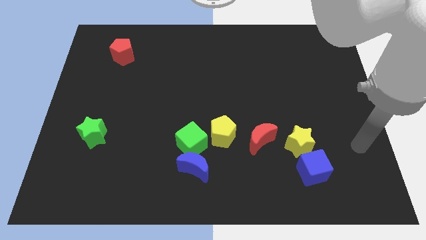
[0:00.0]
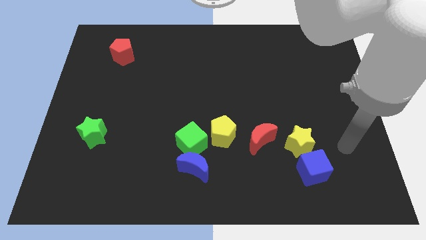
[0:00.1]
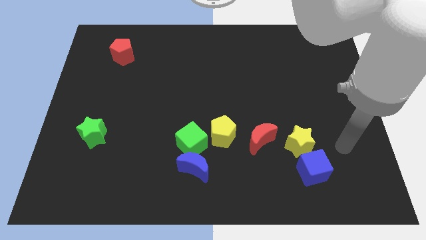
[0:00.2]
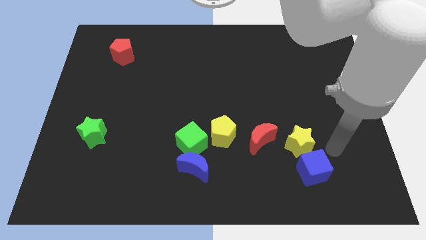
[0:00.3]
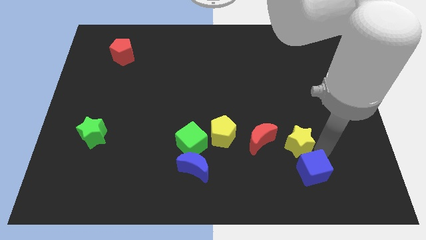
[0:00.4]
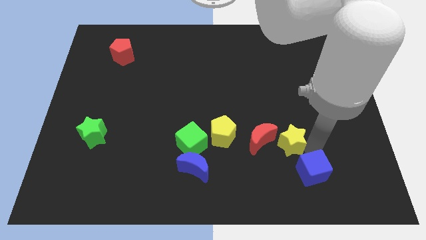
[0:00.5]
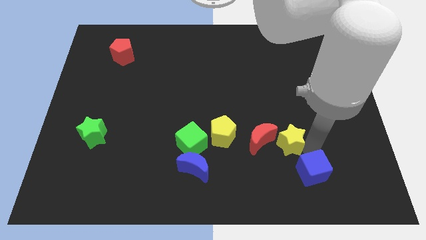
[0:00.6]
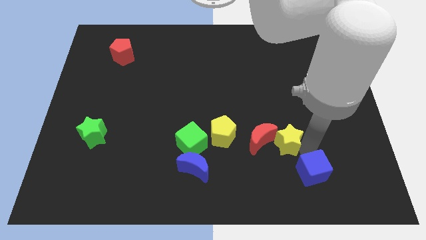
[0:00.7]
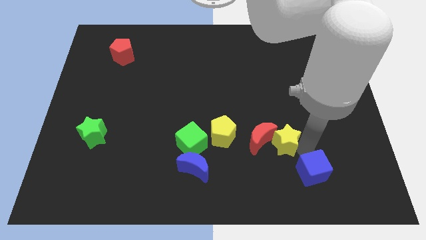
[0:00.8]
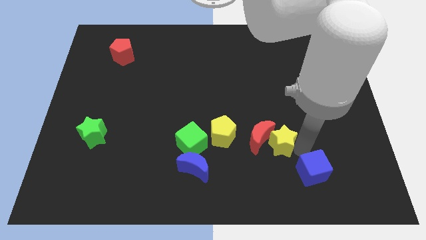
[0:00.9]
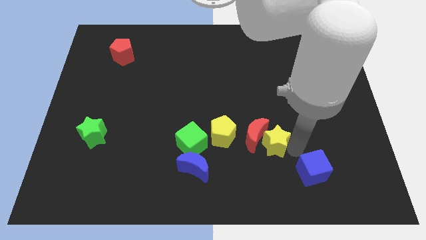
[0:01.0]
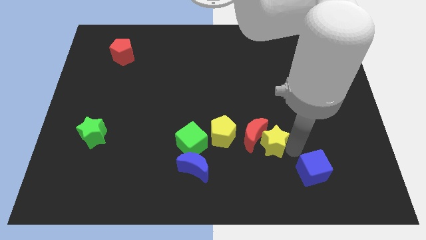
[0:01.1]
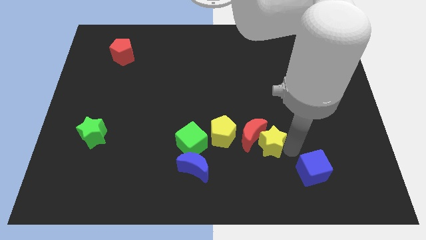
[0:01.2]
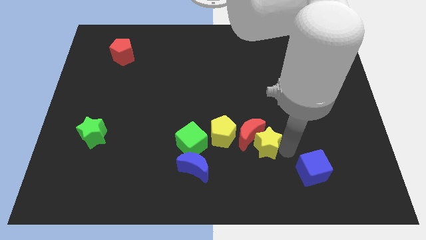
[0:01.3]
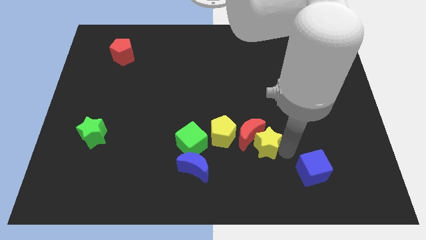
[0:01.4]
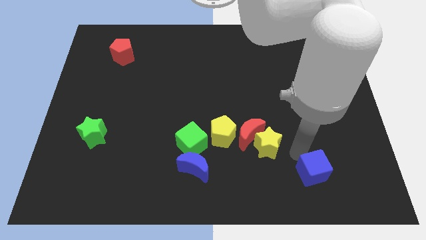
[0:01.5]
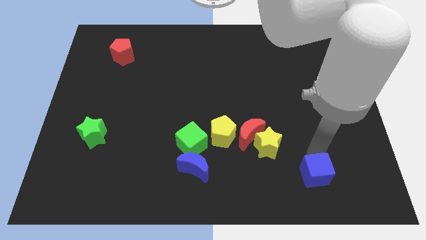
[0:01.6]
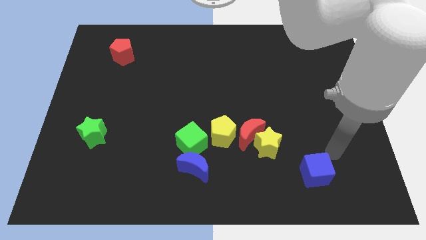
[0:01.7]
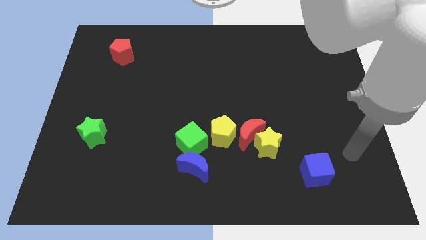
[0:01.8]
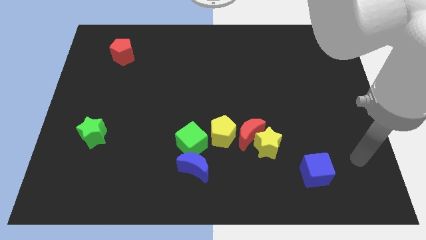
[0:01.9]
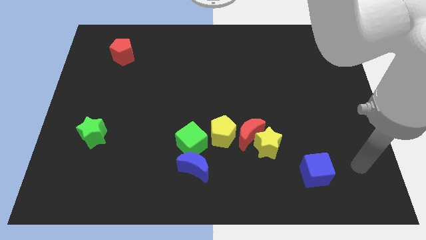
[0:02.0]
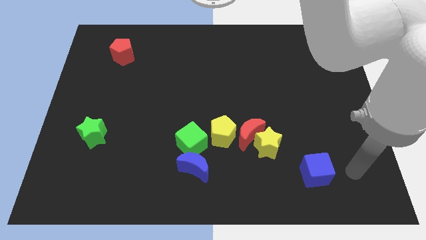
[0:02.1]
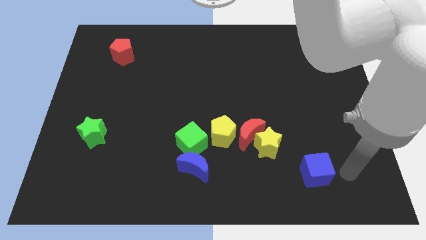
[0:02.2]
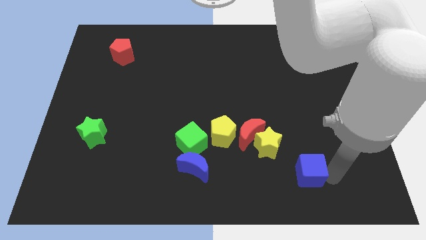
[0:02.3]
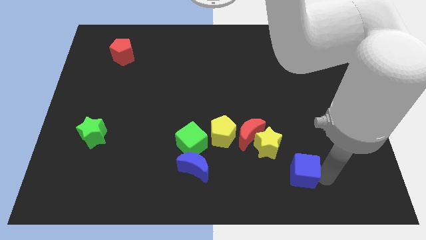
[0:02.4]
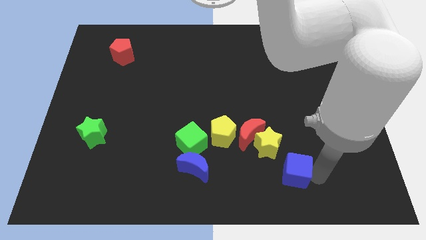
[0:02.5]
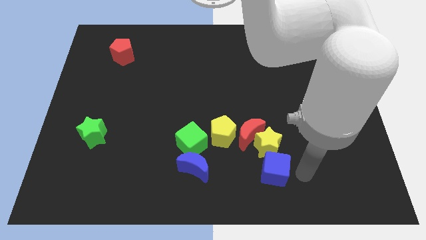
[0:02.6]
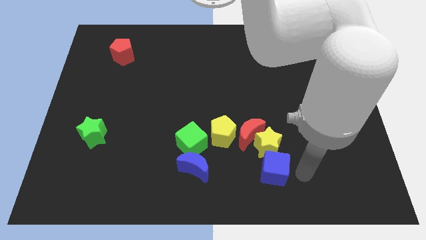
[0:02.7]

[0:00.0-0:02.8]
push the yellow star and blue cube below the yellow star

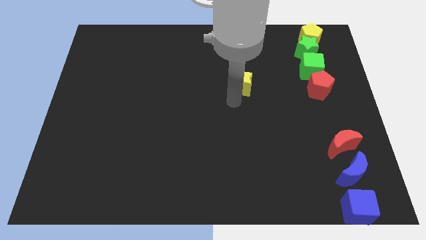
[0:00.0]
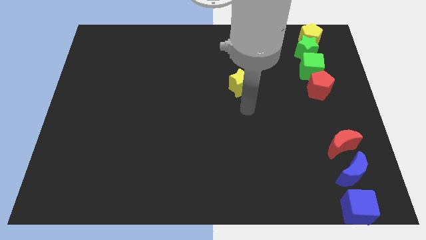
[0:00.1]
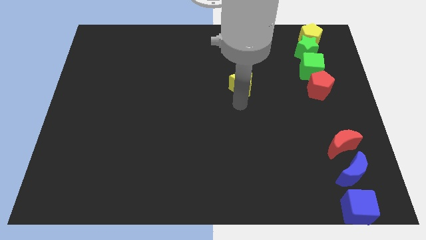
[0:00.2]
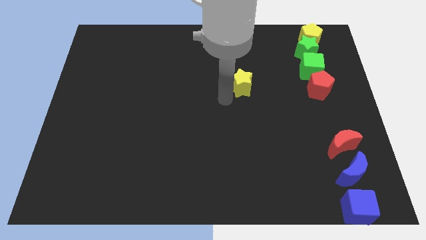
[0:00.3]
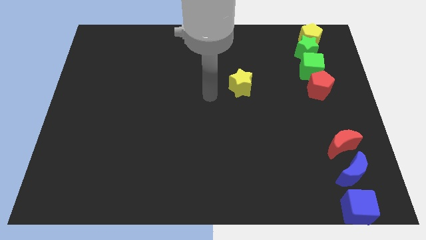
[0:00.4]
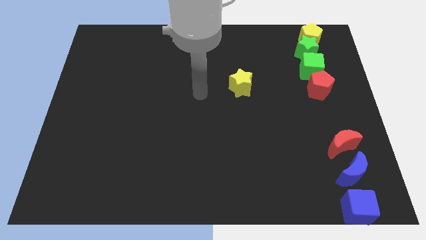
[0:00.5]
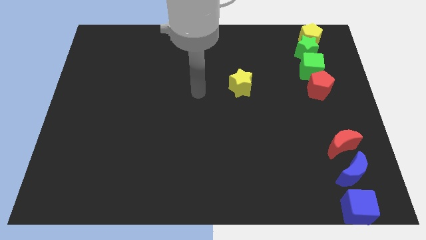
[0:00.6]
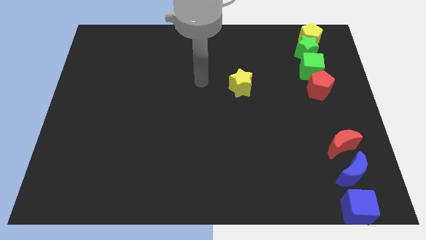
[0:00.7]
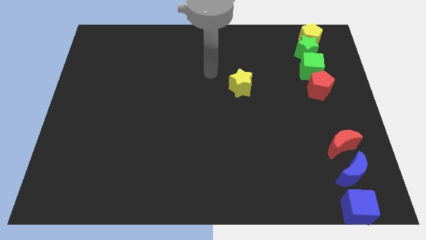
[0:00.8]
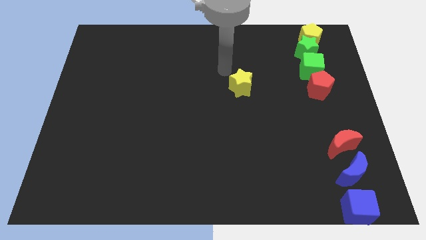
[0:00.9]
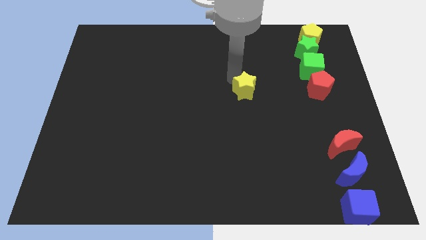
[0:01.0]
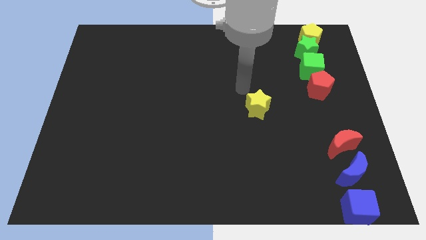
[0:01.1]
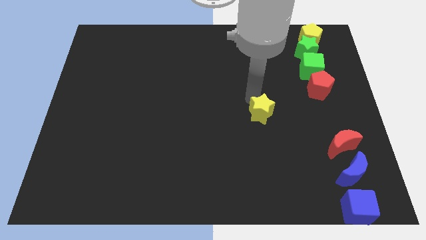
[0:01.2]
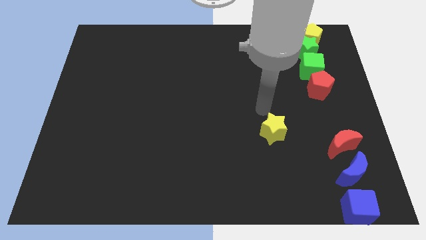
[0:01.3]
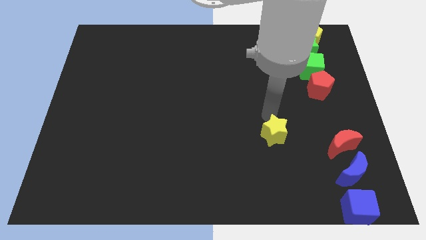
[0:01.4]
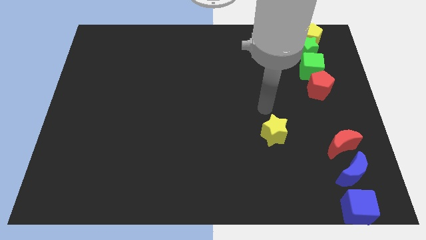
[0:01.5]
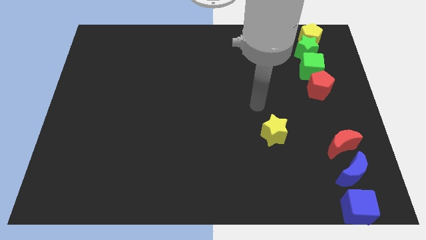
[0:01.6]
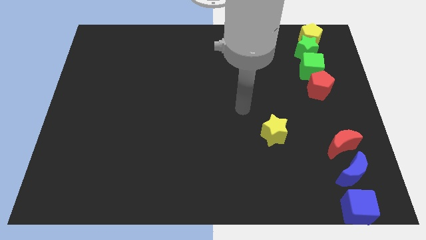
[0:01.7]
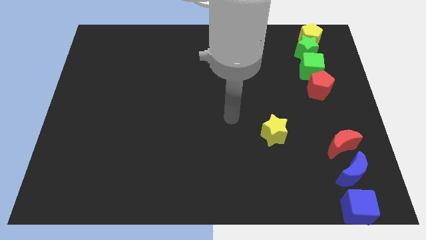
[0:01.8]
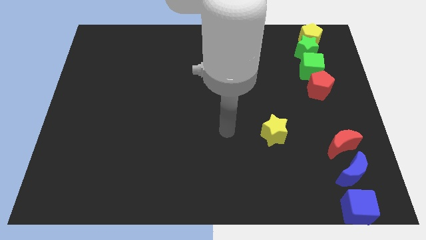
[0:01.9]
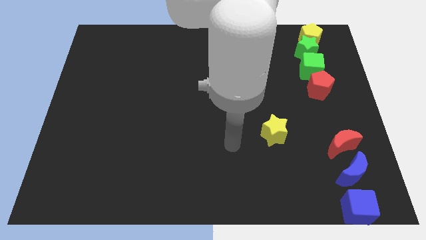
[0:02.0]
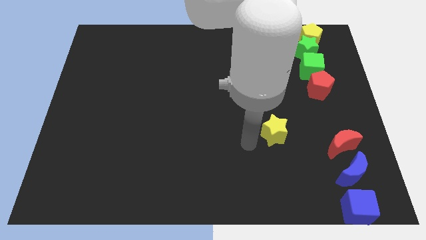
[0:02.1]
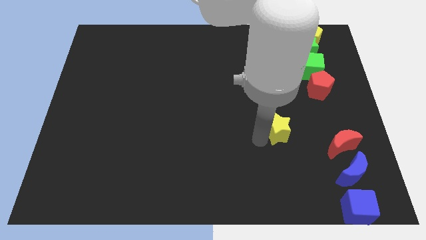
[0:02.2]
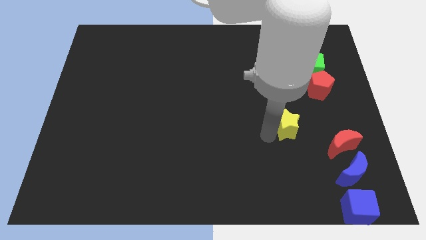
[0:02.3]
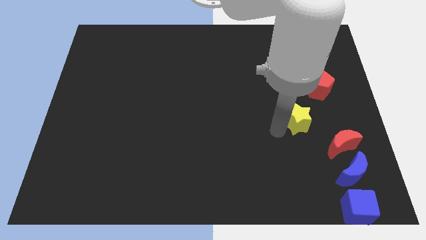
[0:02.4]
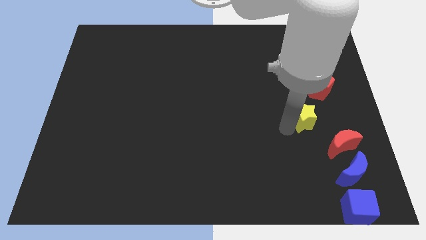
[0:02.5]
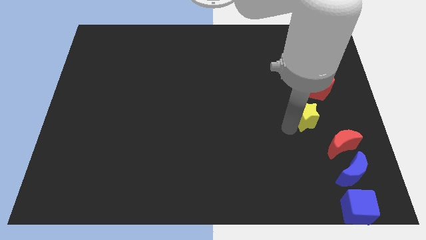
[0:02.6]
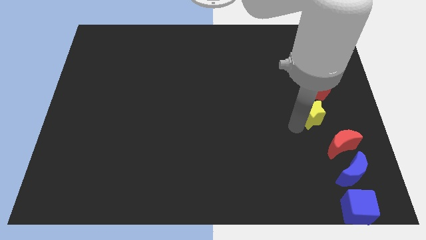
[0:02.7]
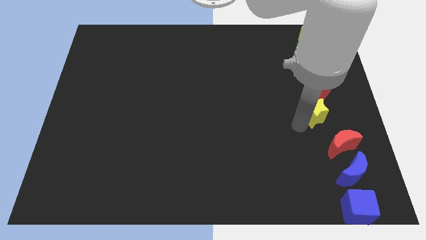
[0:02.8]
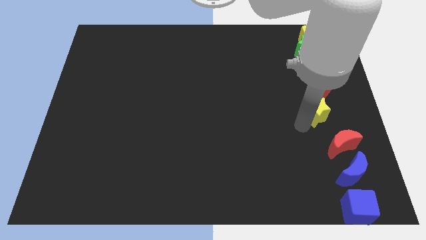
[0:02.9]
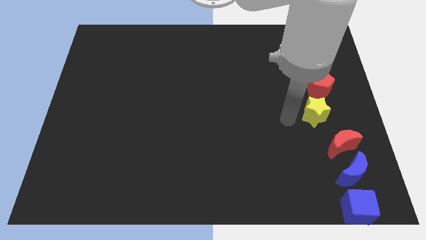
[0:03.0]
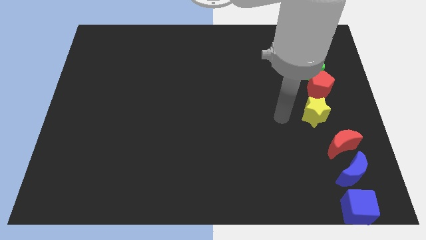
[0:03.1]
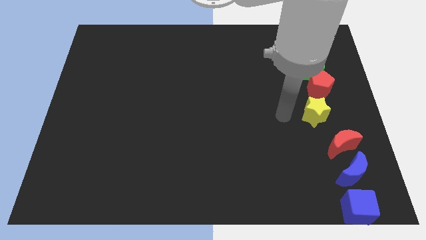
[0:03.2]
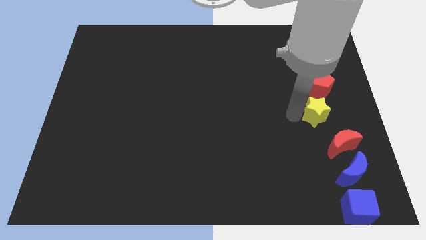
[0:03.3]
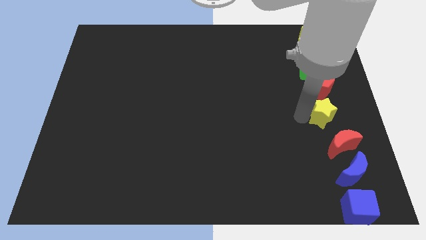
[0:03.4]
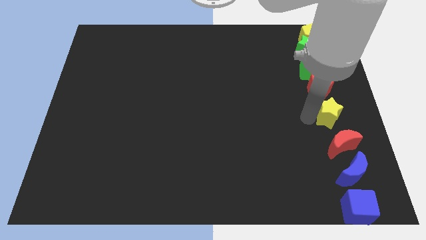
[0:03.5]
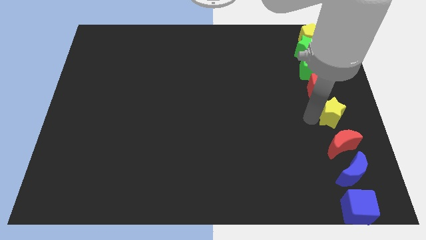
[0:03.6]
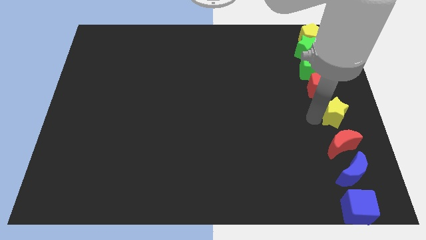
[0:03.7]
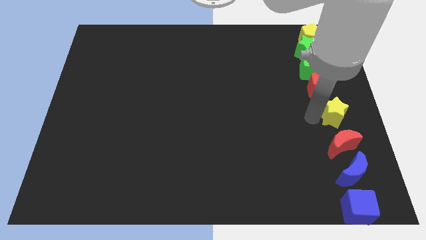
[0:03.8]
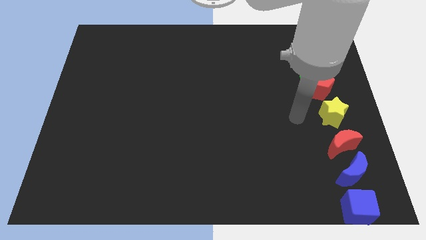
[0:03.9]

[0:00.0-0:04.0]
place the yellow star in between the red pentagon and the red crescent to form a vertical line of blocks

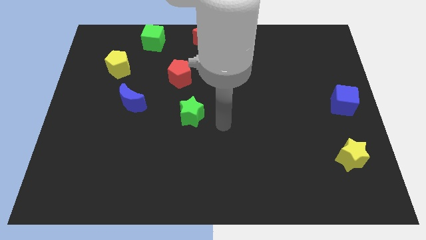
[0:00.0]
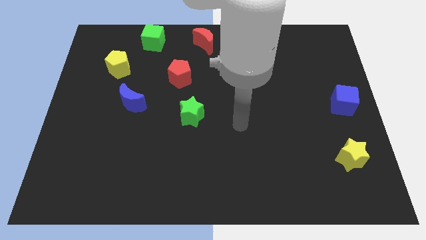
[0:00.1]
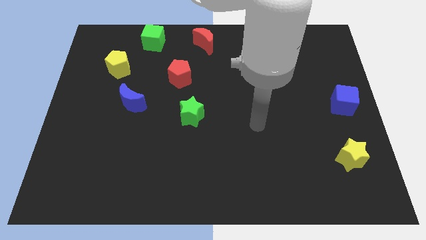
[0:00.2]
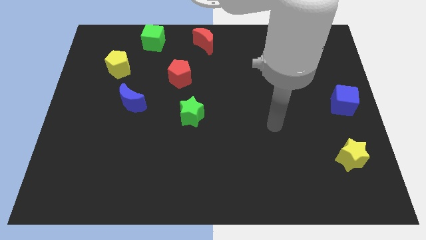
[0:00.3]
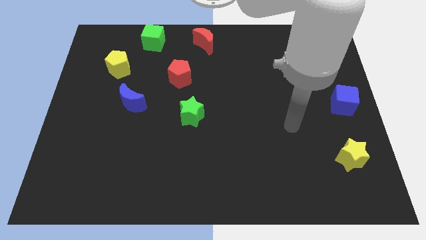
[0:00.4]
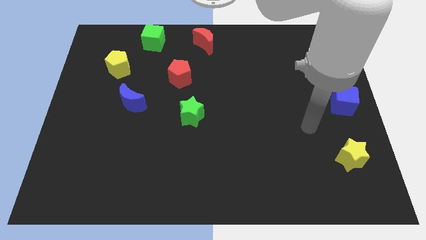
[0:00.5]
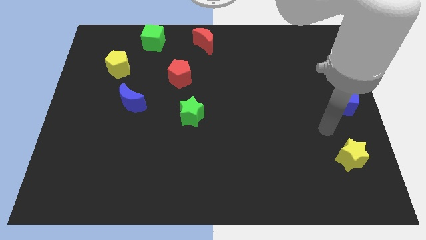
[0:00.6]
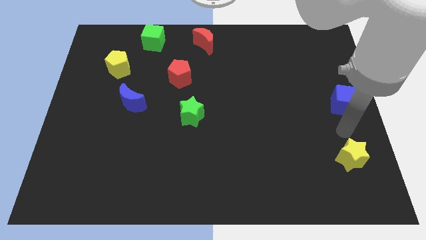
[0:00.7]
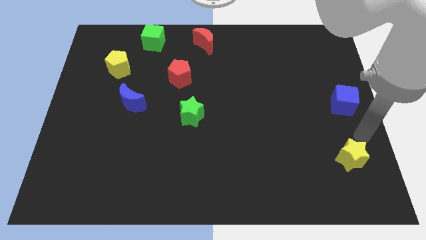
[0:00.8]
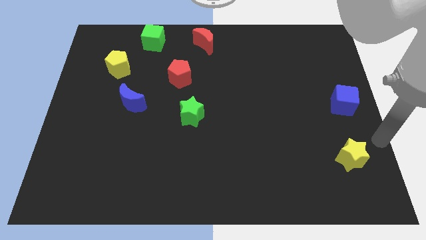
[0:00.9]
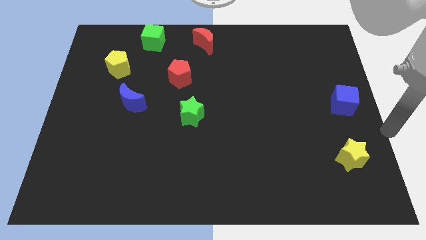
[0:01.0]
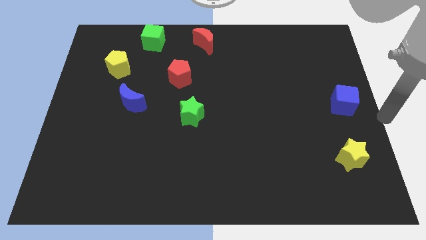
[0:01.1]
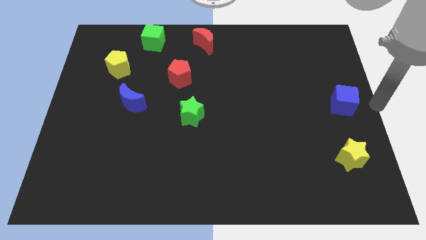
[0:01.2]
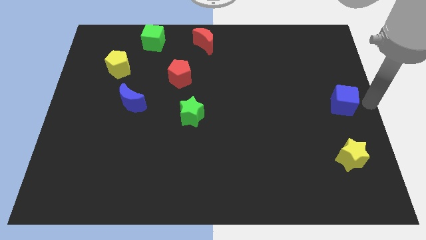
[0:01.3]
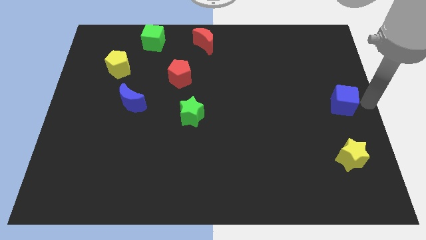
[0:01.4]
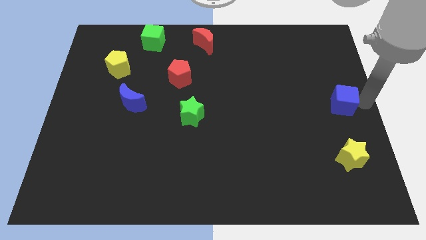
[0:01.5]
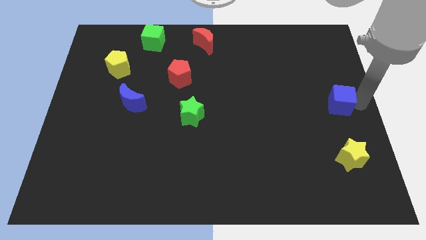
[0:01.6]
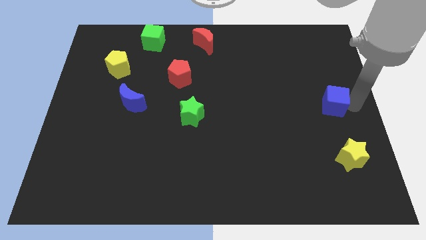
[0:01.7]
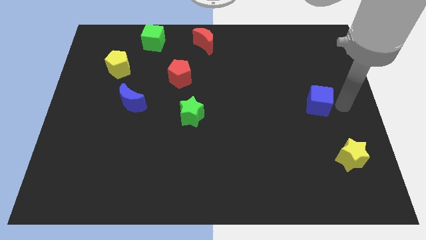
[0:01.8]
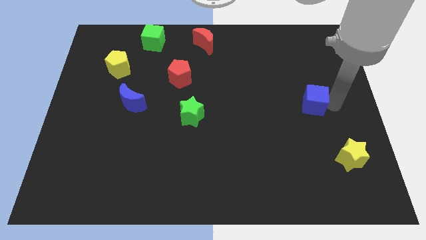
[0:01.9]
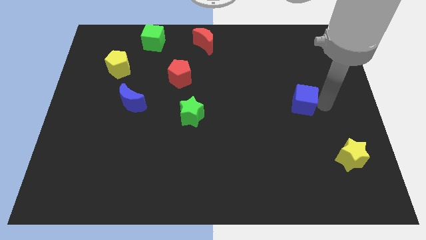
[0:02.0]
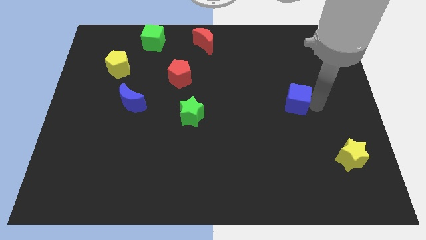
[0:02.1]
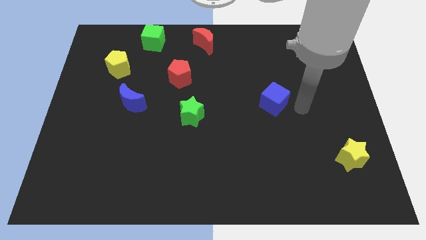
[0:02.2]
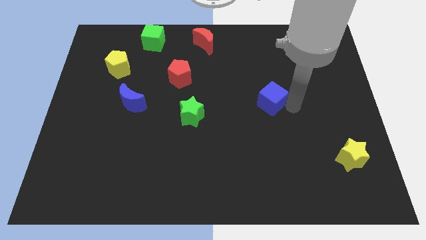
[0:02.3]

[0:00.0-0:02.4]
push the blue cube to the left
